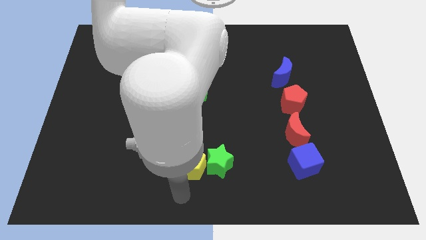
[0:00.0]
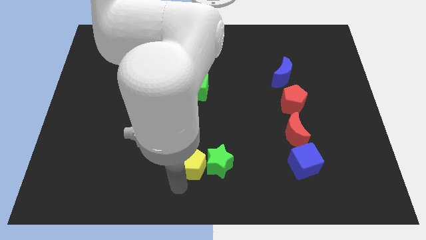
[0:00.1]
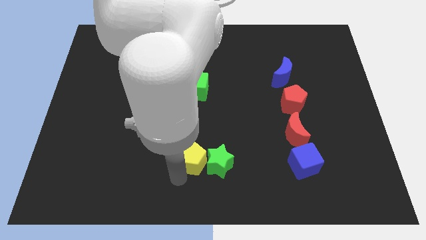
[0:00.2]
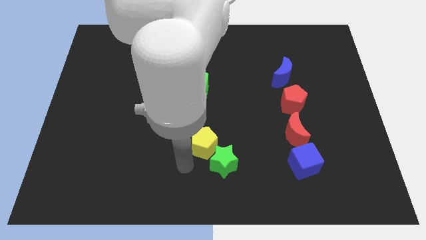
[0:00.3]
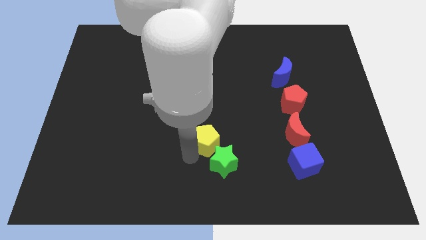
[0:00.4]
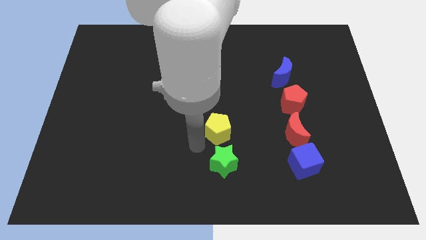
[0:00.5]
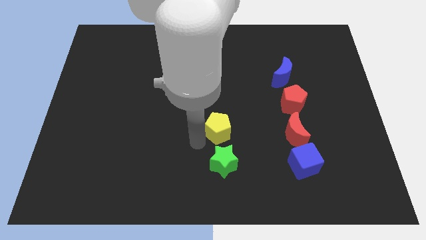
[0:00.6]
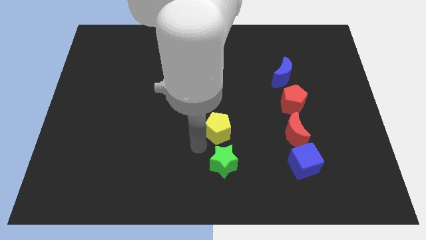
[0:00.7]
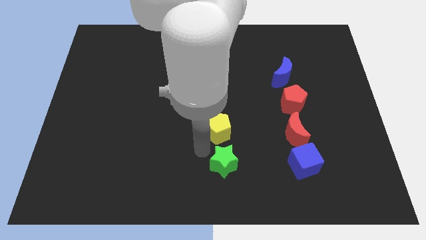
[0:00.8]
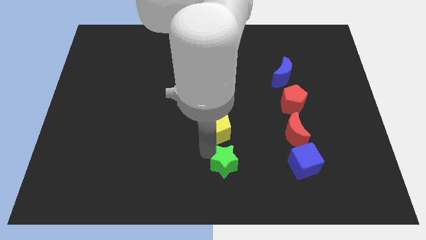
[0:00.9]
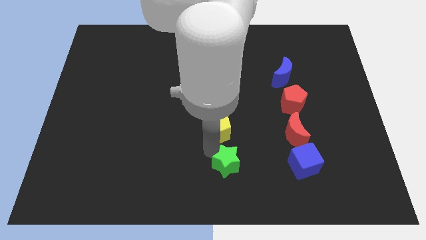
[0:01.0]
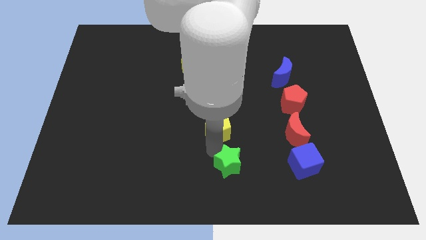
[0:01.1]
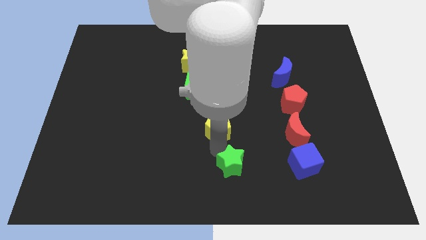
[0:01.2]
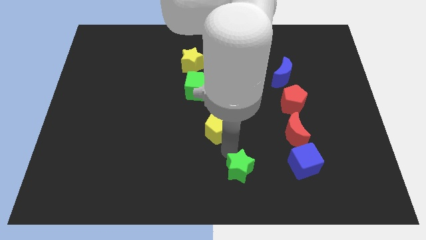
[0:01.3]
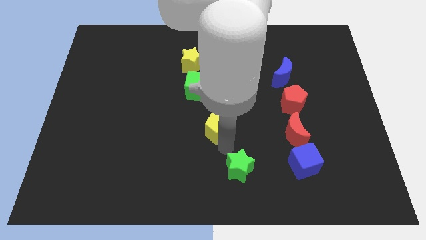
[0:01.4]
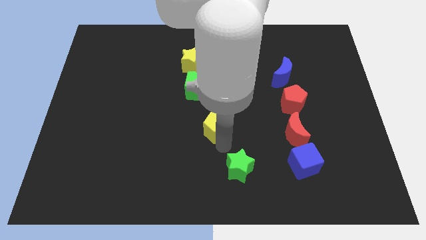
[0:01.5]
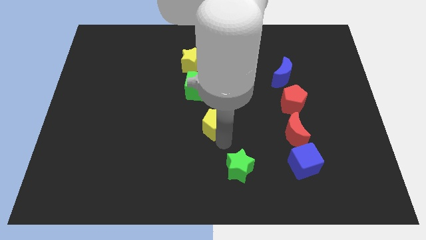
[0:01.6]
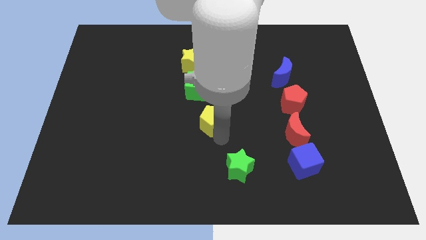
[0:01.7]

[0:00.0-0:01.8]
push the yellow pentagon to the bottom right side of the green cube

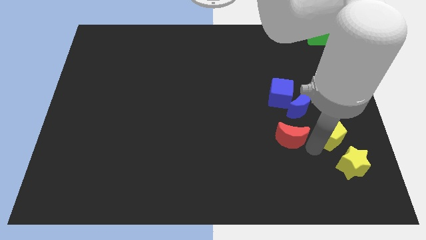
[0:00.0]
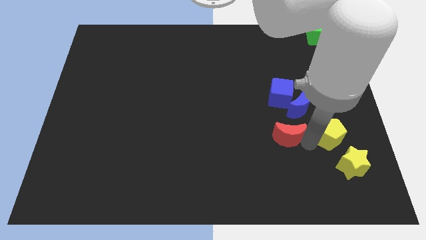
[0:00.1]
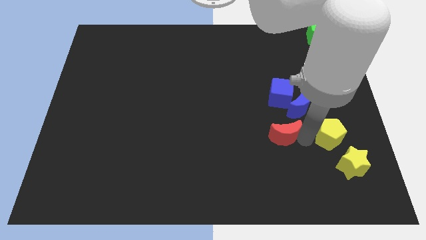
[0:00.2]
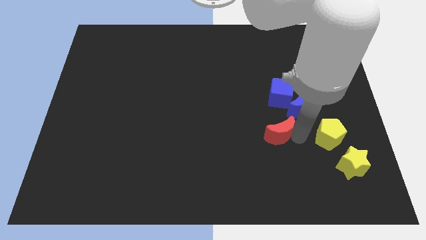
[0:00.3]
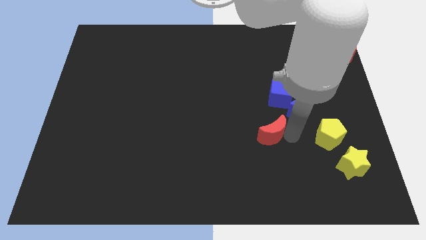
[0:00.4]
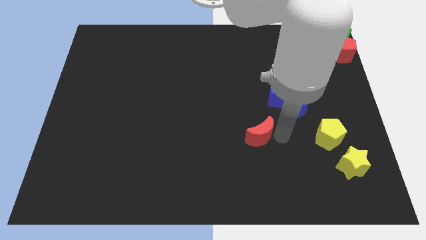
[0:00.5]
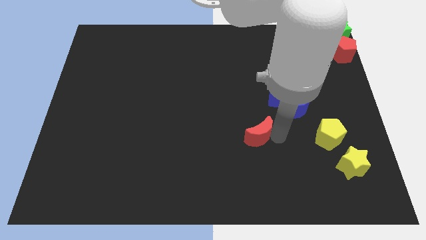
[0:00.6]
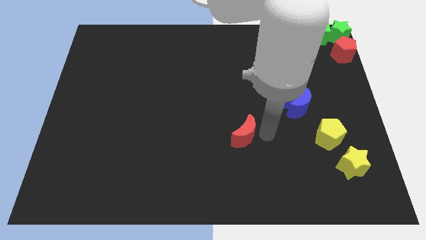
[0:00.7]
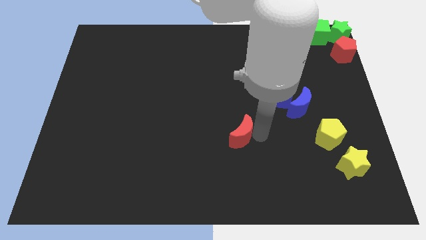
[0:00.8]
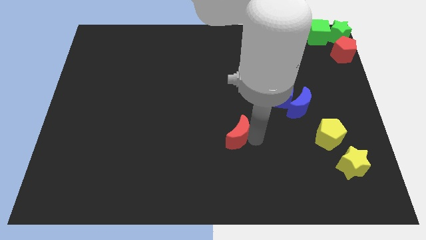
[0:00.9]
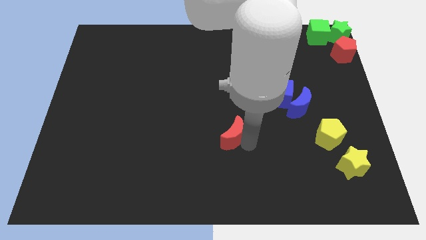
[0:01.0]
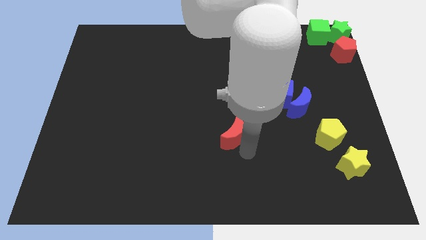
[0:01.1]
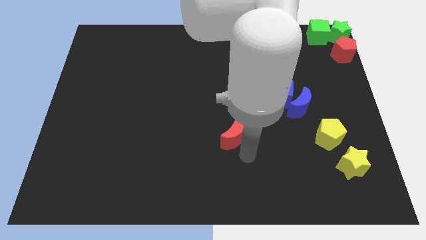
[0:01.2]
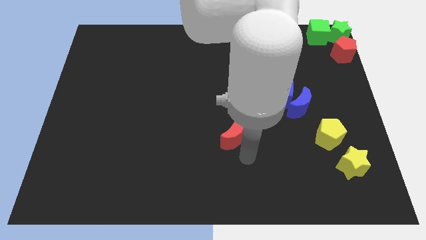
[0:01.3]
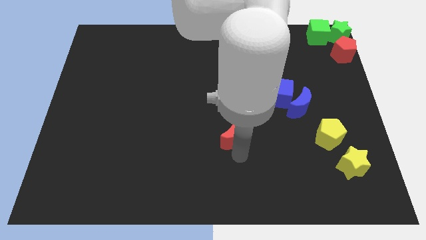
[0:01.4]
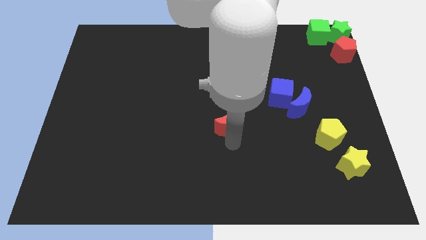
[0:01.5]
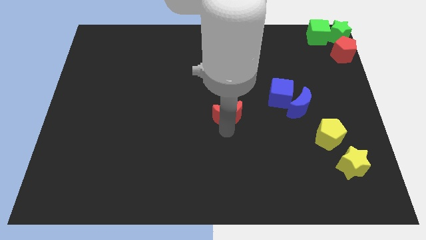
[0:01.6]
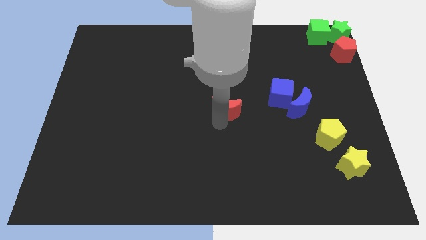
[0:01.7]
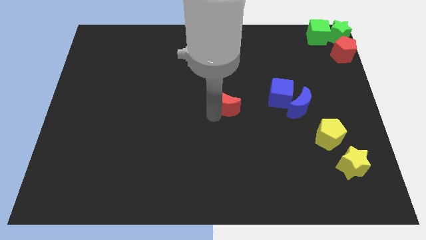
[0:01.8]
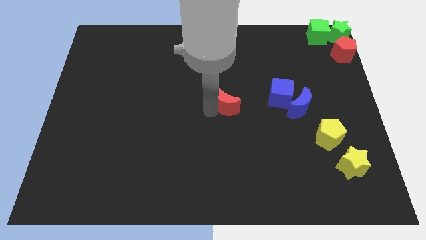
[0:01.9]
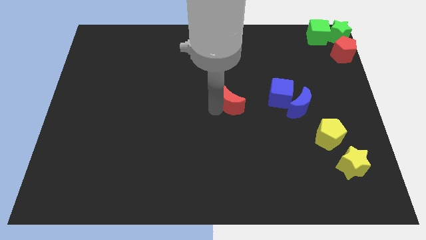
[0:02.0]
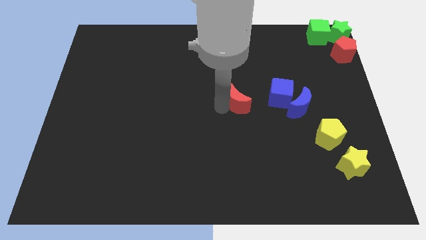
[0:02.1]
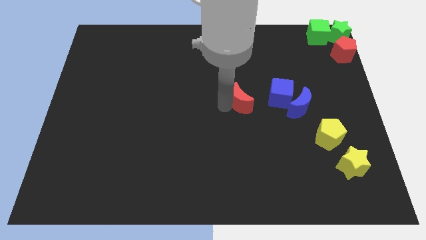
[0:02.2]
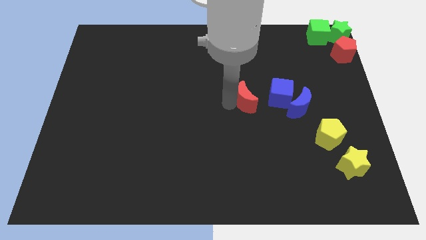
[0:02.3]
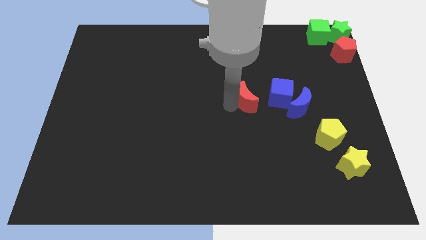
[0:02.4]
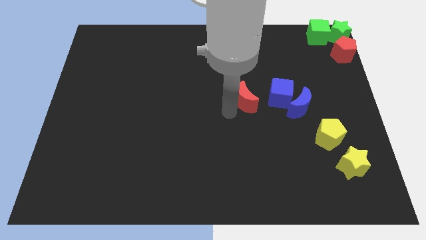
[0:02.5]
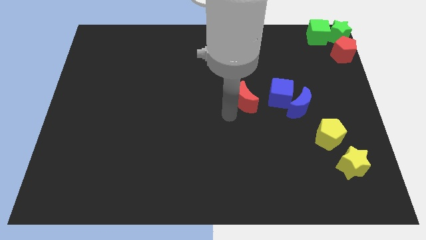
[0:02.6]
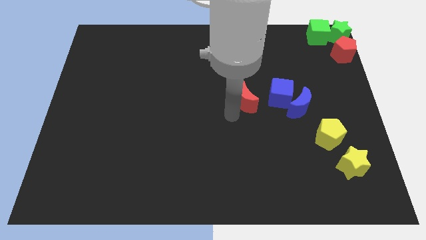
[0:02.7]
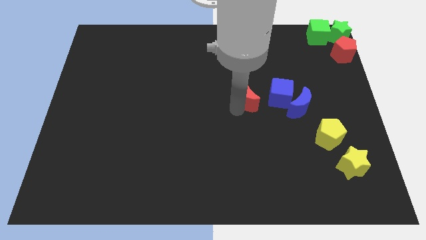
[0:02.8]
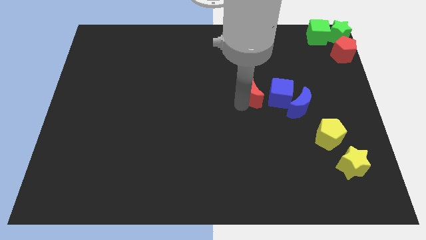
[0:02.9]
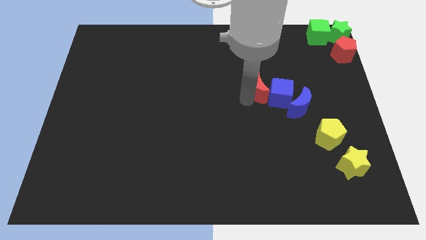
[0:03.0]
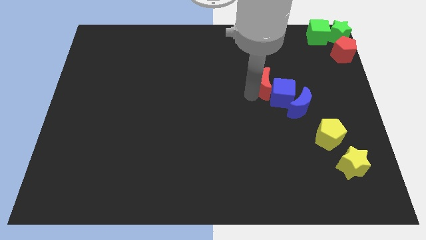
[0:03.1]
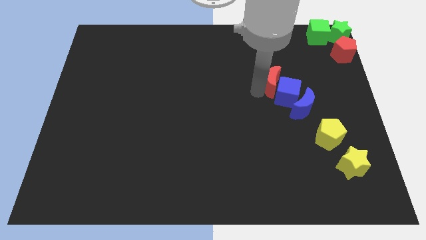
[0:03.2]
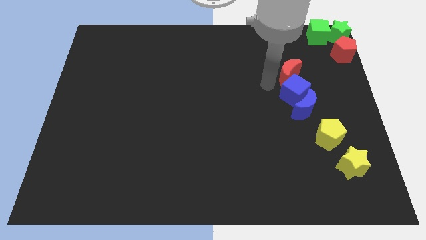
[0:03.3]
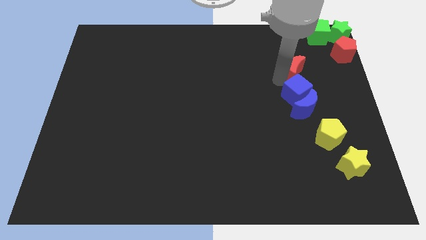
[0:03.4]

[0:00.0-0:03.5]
move the red crescent into the blue cube

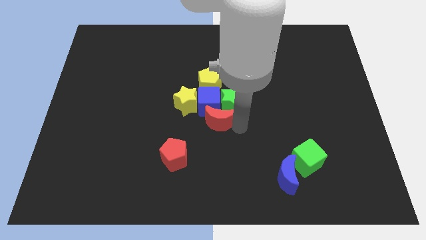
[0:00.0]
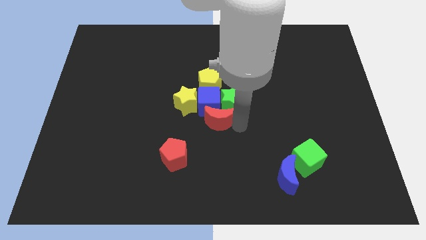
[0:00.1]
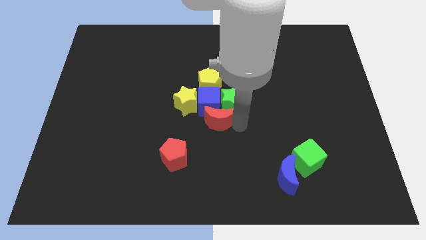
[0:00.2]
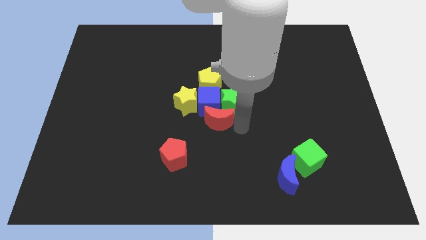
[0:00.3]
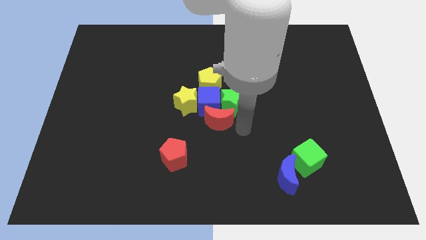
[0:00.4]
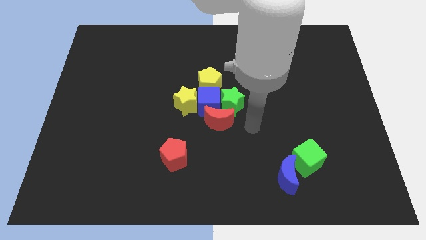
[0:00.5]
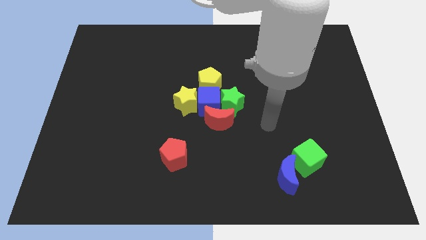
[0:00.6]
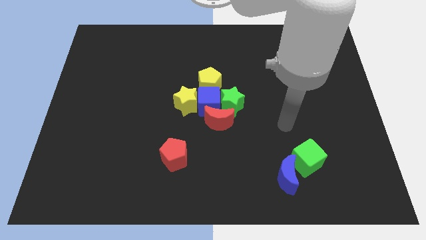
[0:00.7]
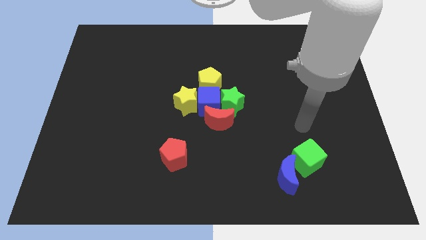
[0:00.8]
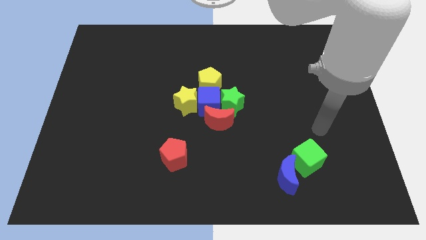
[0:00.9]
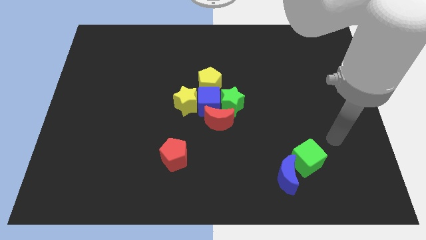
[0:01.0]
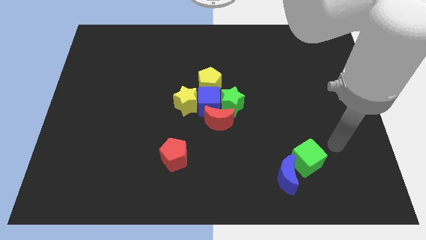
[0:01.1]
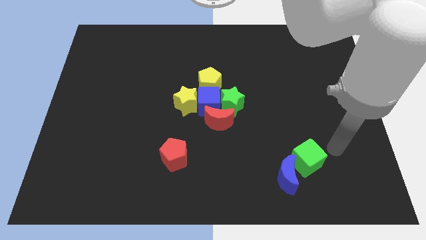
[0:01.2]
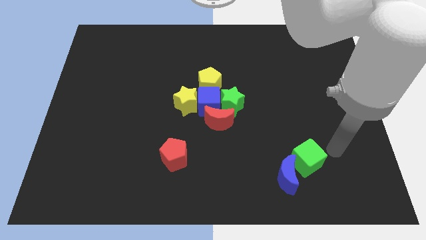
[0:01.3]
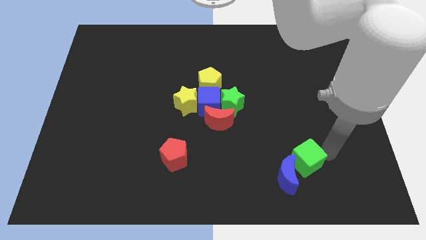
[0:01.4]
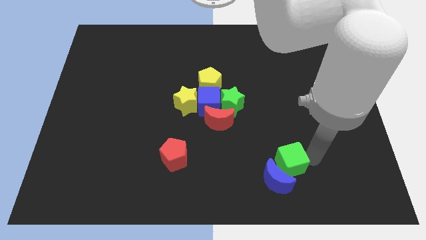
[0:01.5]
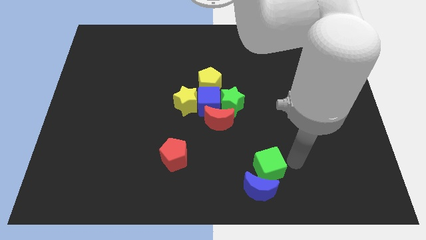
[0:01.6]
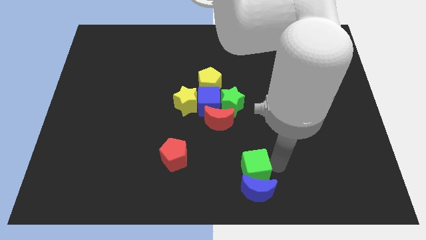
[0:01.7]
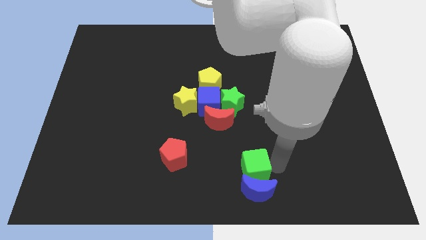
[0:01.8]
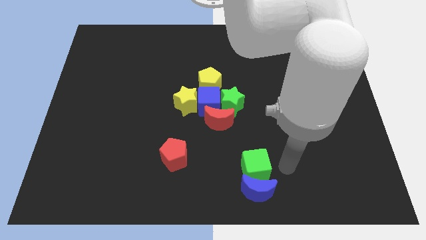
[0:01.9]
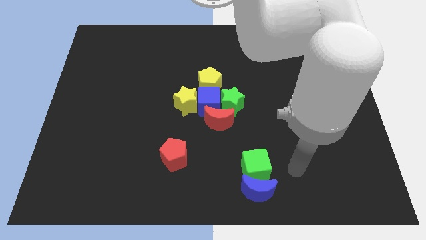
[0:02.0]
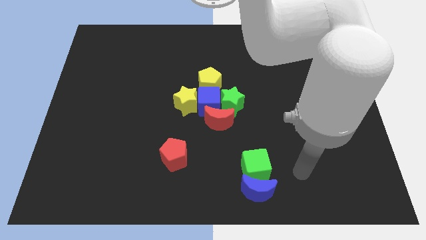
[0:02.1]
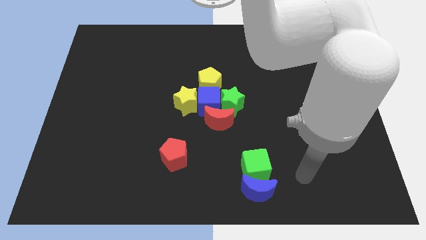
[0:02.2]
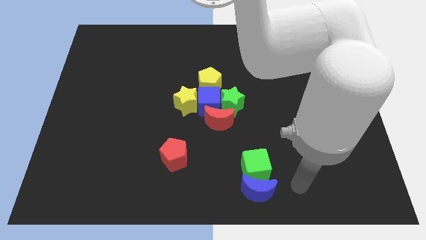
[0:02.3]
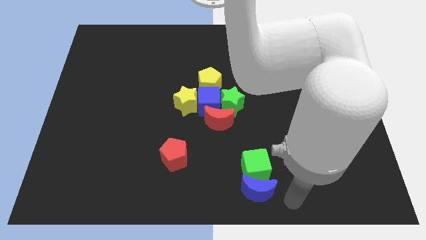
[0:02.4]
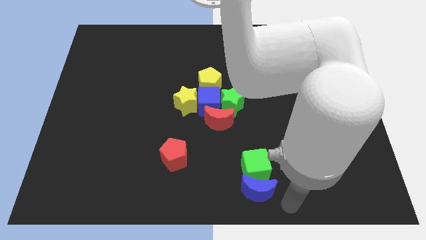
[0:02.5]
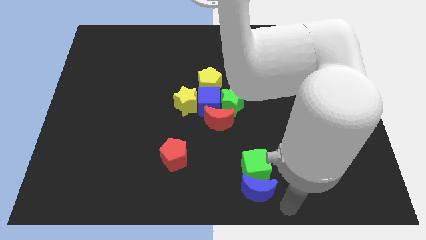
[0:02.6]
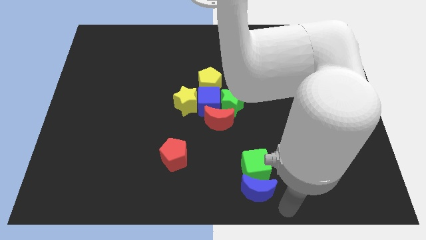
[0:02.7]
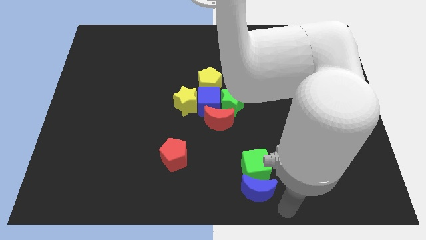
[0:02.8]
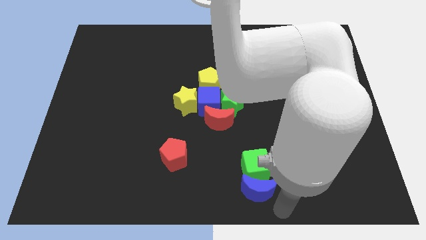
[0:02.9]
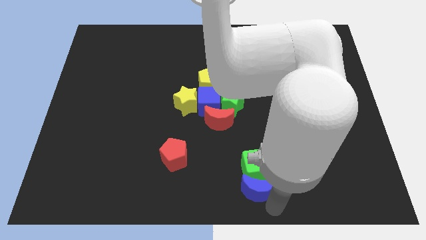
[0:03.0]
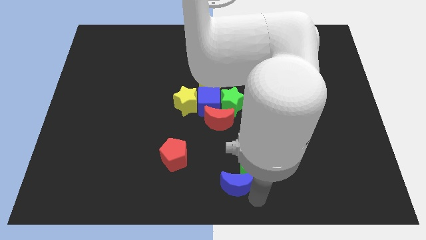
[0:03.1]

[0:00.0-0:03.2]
move the green cube and blue moon to the bottom center of the board

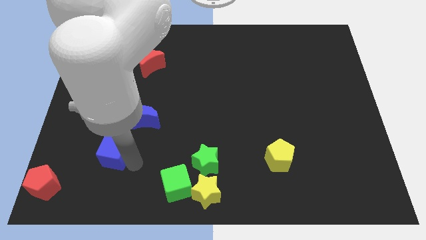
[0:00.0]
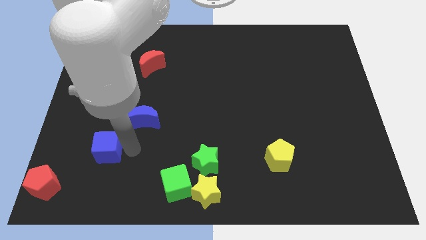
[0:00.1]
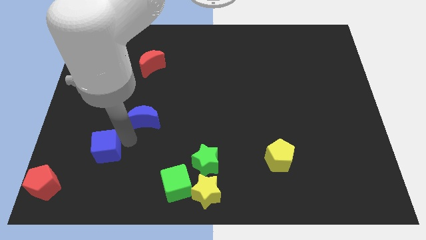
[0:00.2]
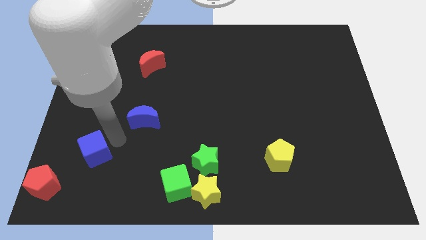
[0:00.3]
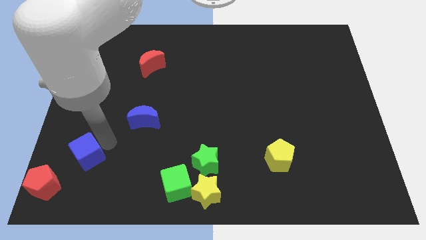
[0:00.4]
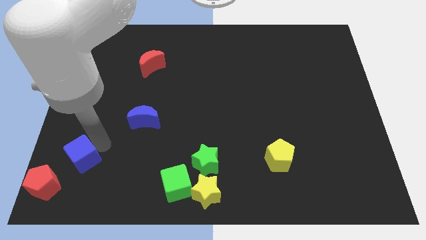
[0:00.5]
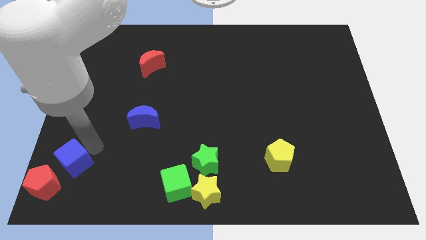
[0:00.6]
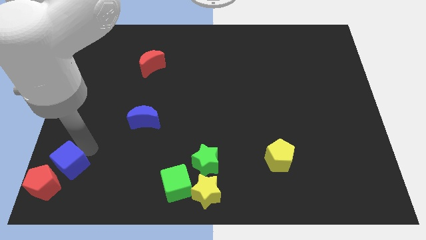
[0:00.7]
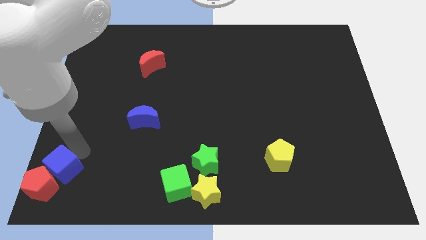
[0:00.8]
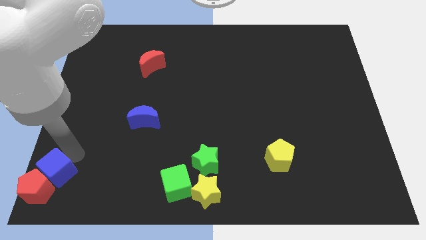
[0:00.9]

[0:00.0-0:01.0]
push blue cube in to red pentagon
